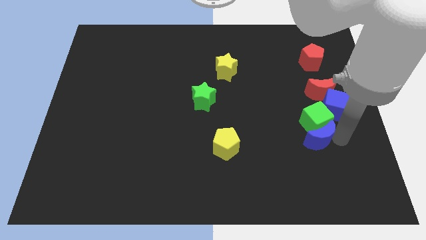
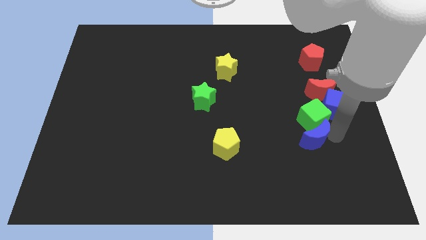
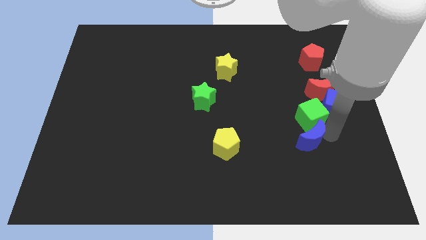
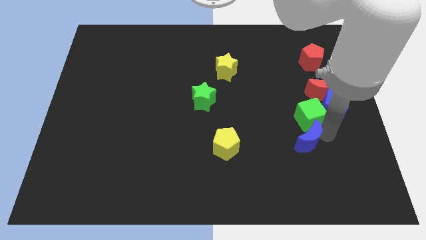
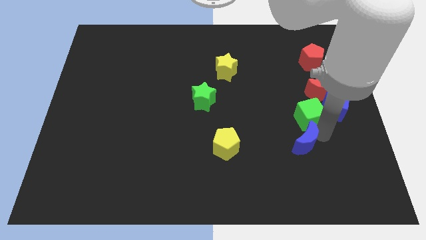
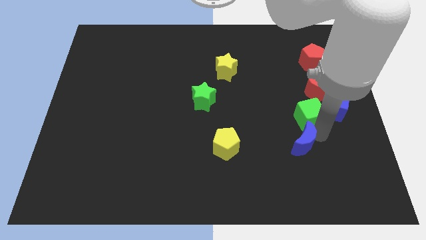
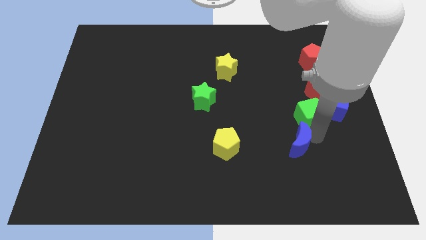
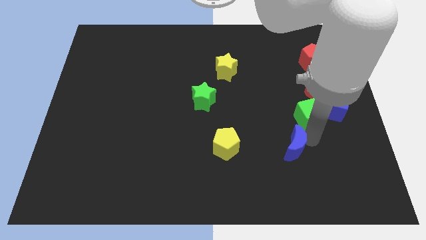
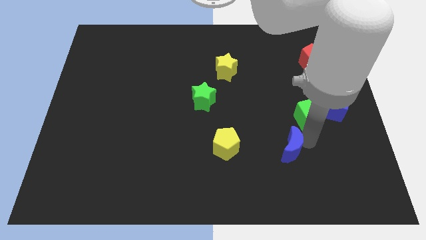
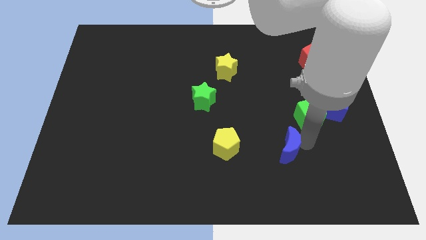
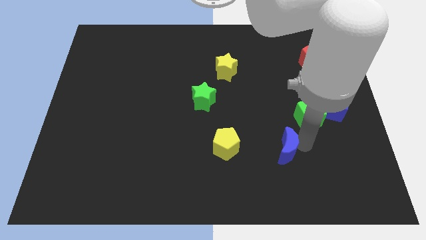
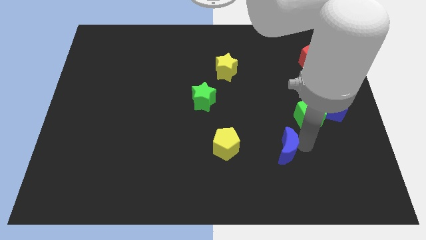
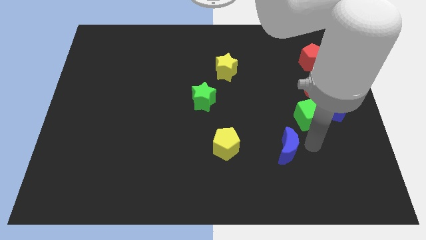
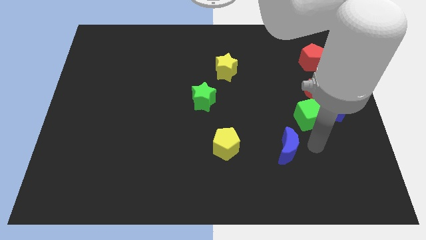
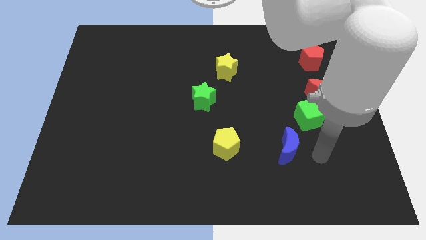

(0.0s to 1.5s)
push the blue moon away from the green cube

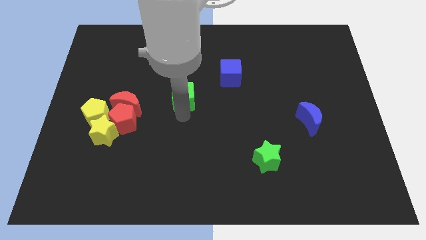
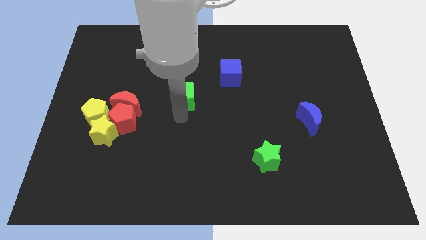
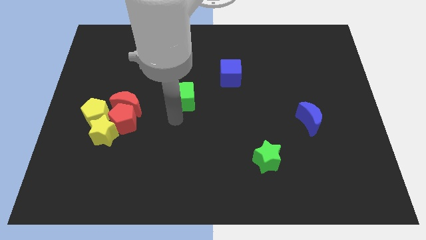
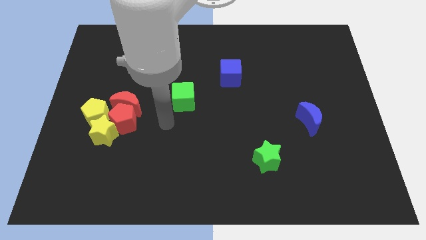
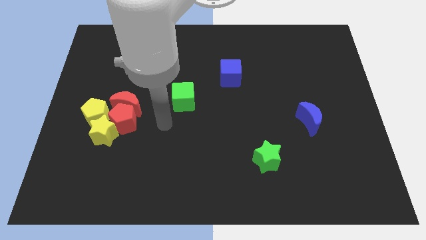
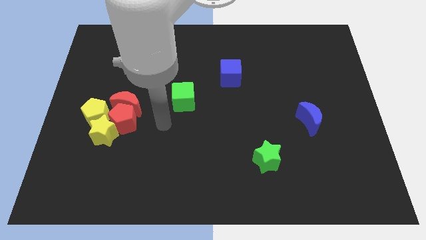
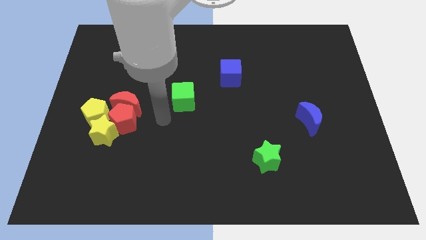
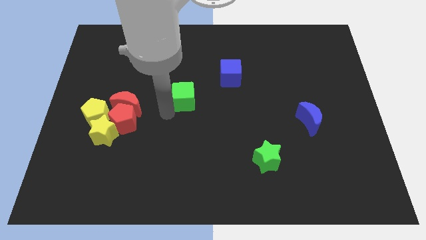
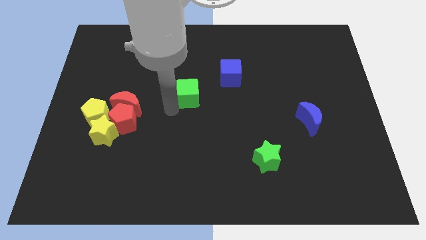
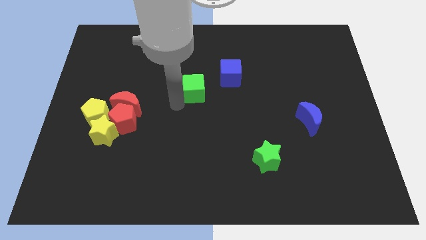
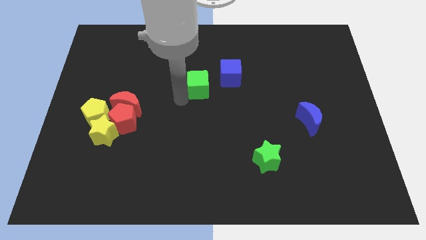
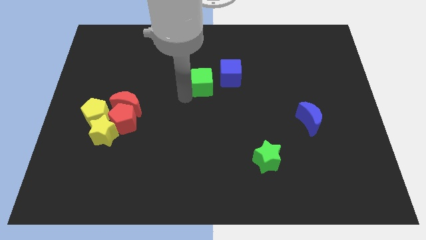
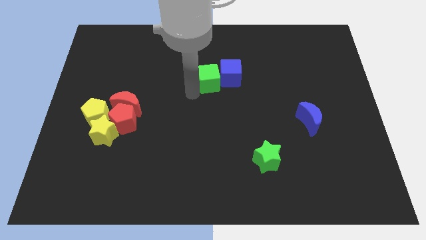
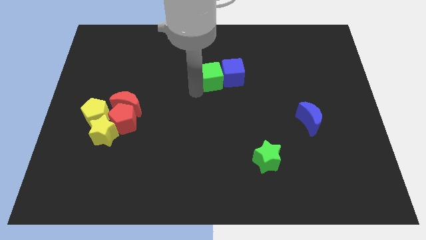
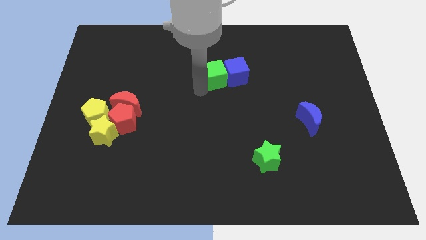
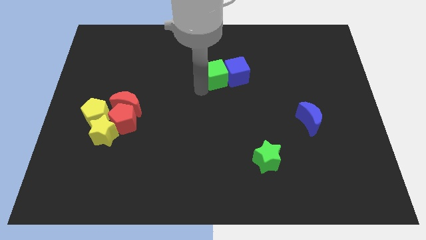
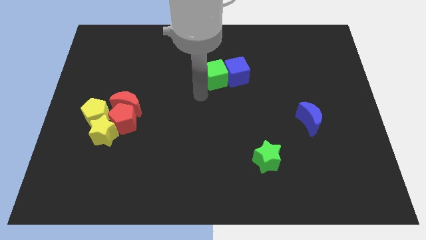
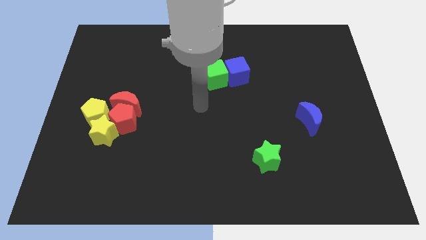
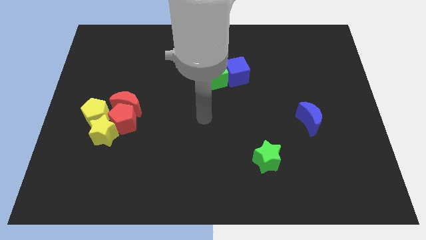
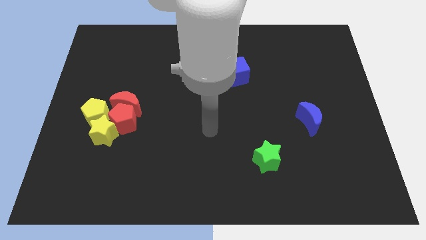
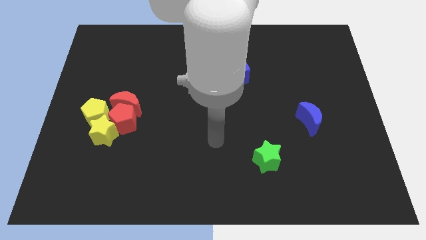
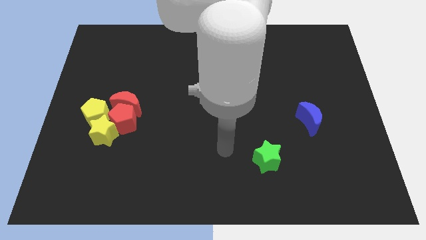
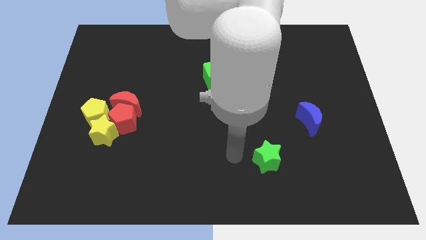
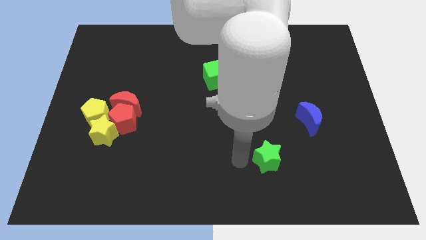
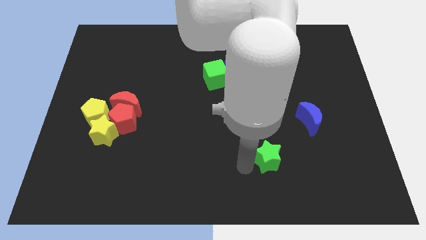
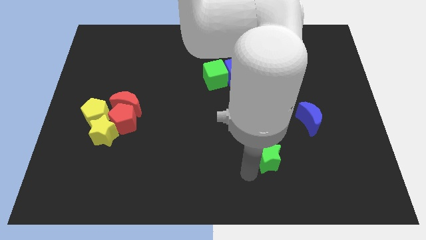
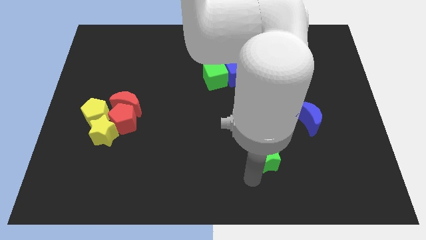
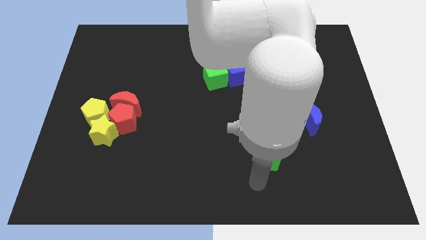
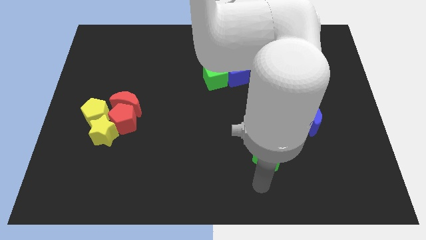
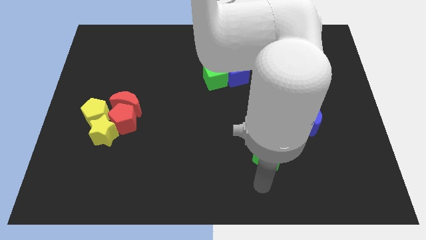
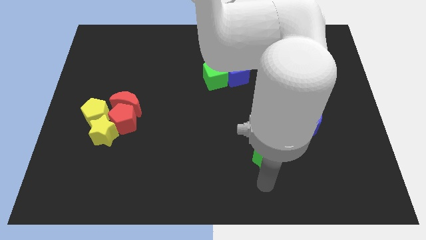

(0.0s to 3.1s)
push the green cube into the blue cube

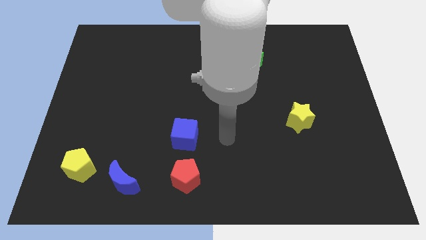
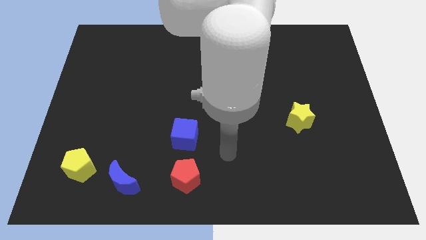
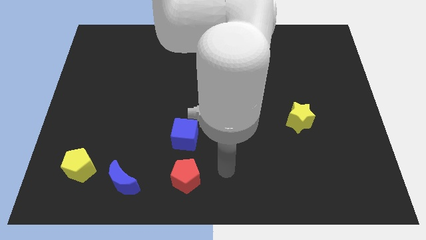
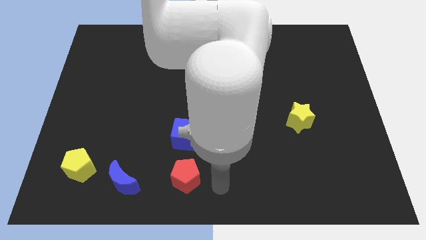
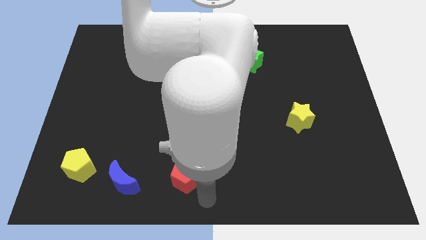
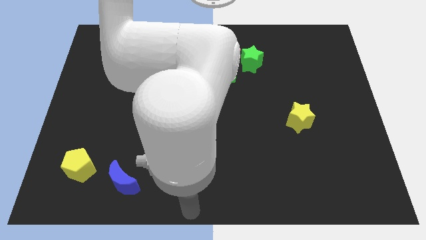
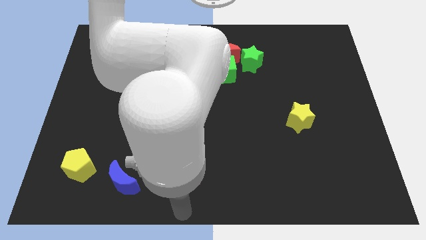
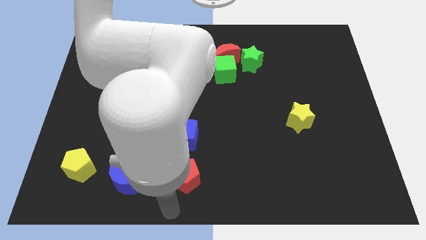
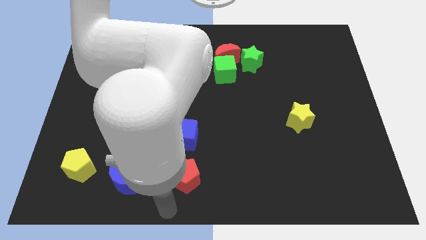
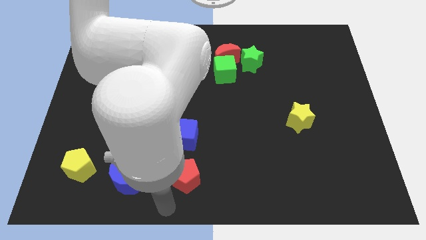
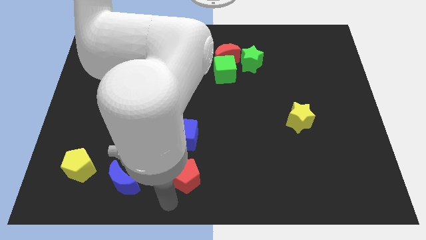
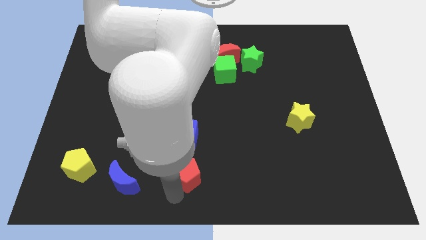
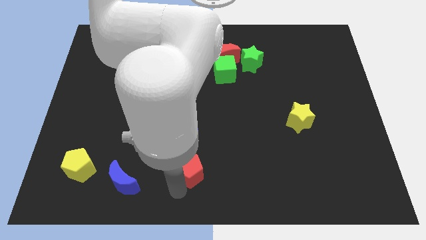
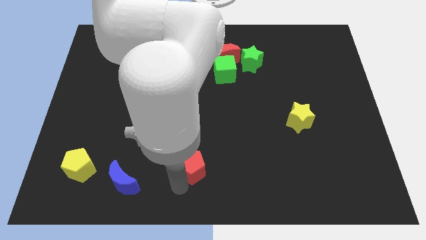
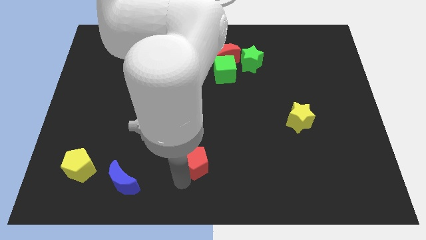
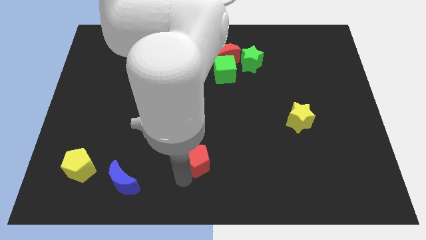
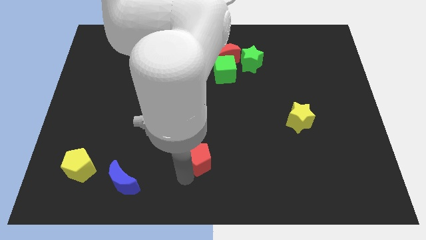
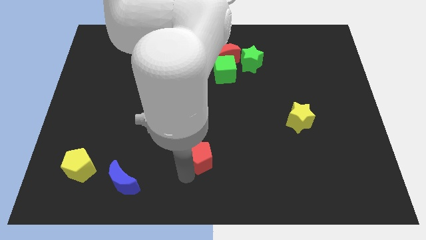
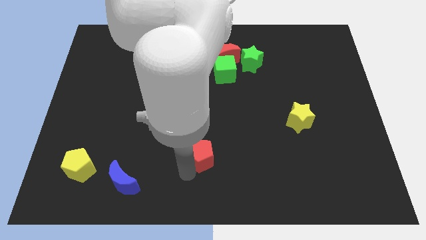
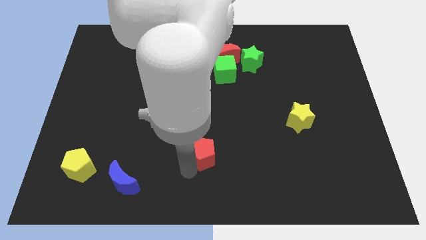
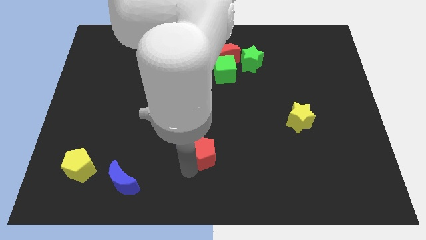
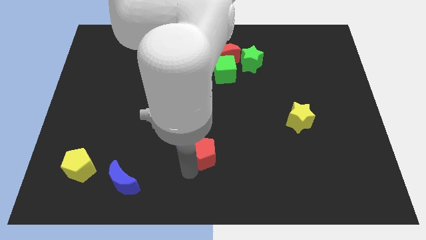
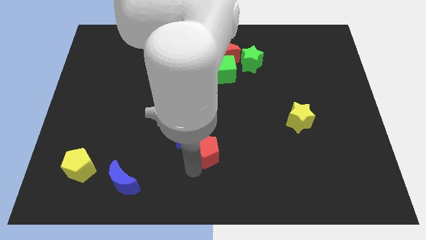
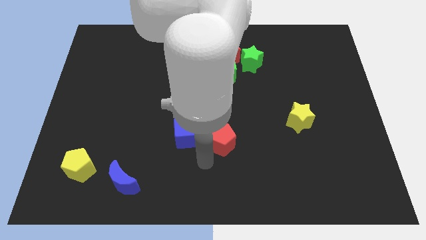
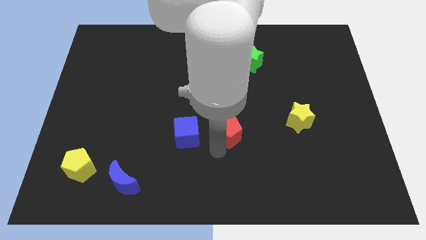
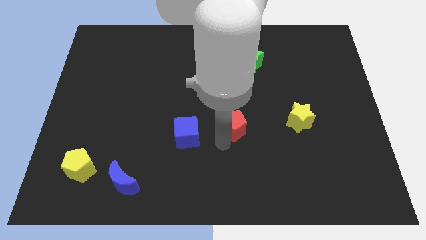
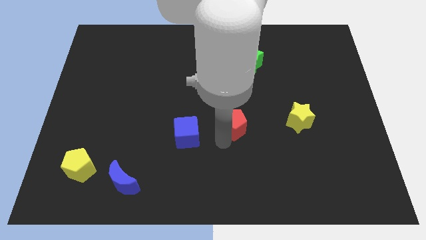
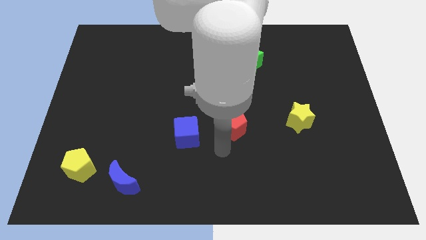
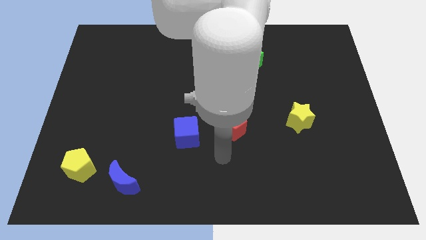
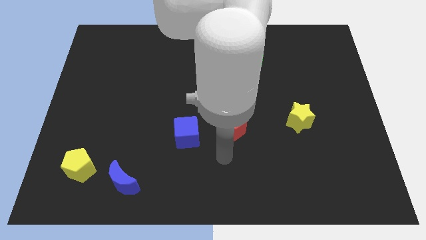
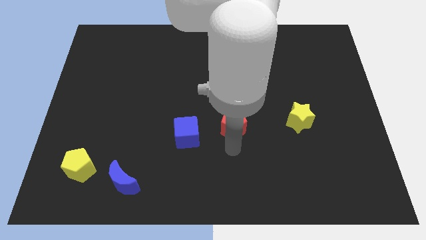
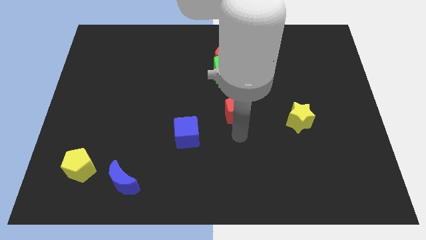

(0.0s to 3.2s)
place the red pentagon in between blue cube and yellow star

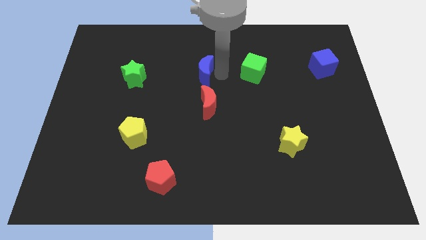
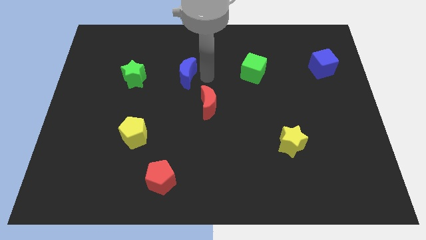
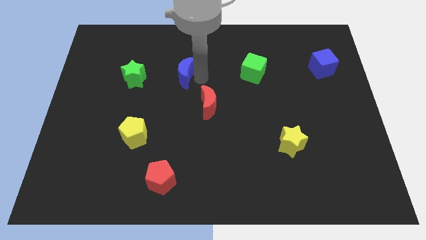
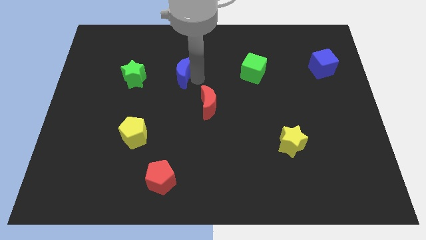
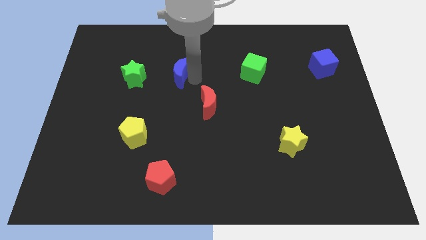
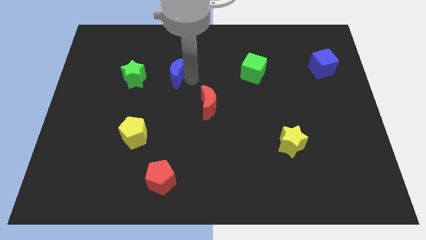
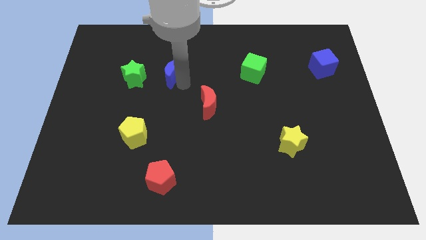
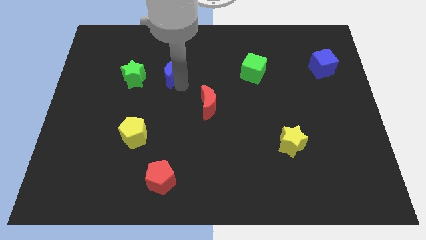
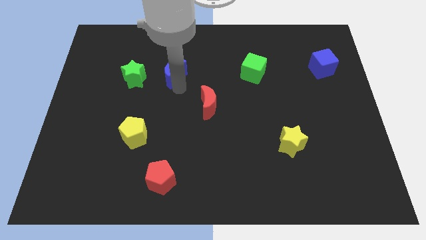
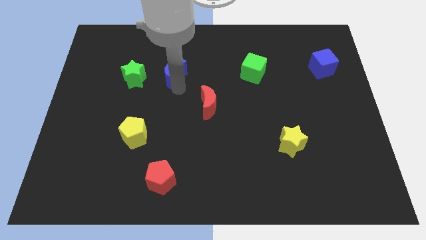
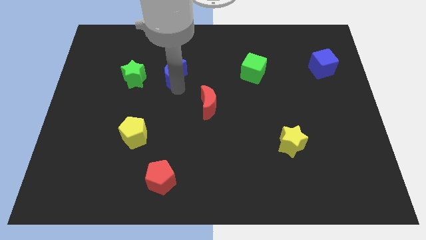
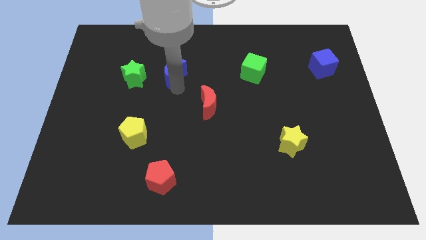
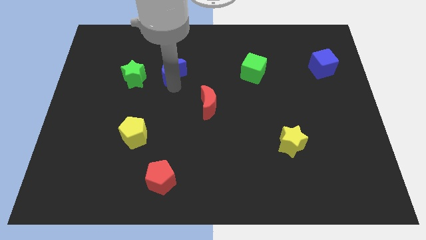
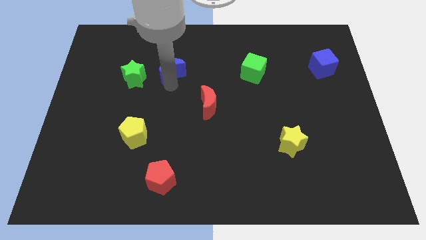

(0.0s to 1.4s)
place the blue crescent right to the green star
